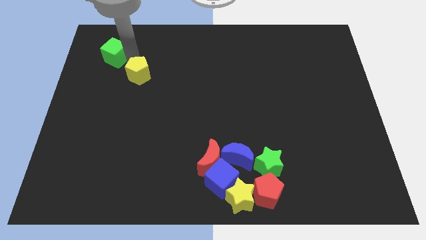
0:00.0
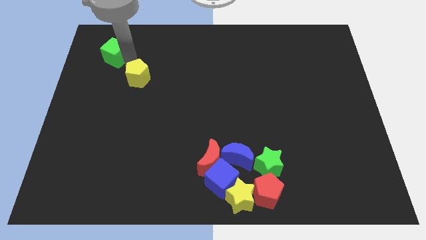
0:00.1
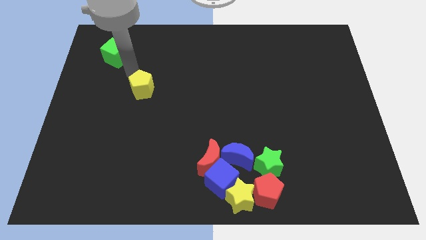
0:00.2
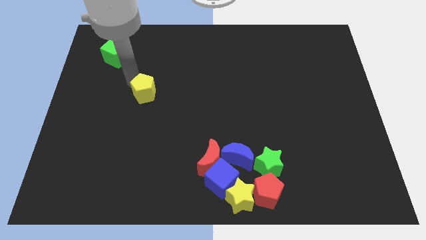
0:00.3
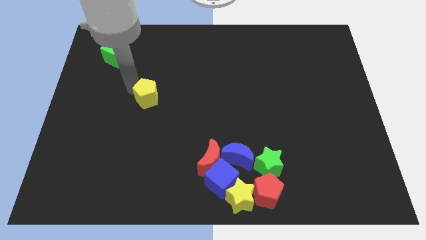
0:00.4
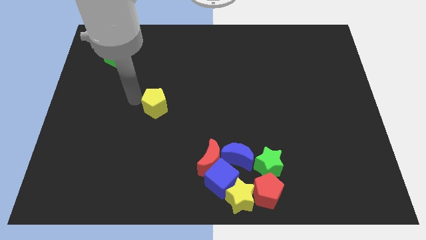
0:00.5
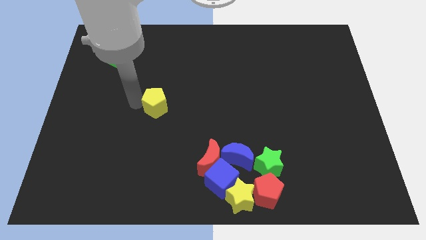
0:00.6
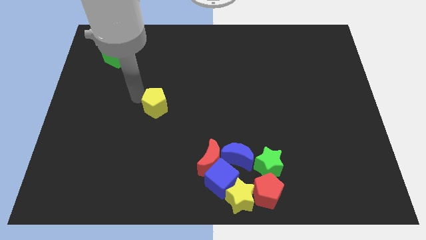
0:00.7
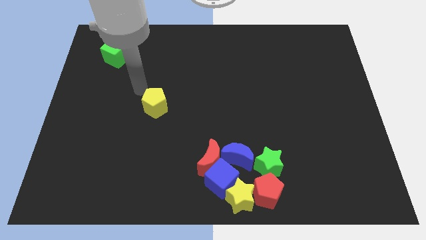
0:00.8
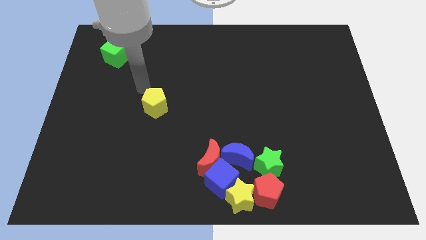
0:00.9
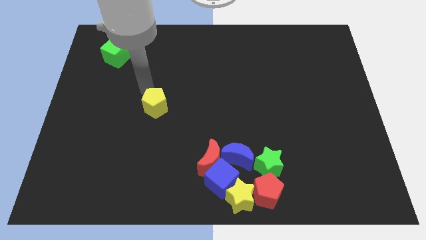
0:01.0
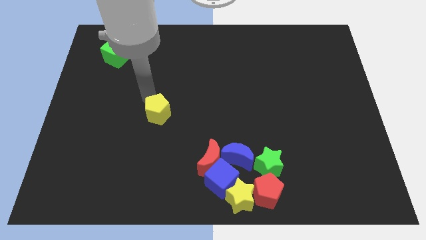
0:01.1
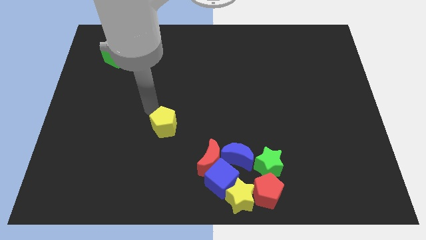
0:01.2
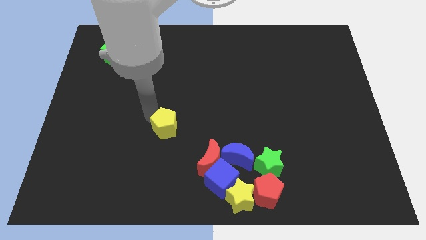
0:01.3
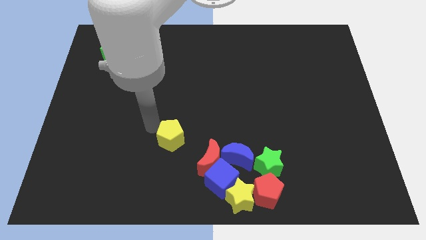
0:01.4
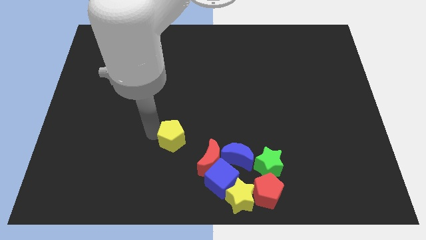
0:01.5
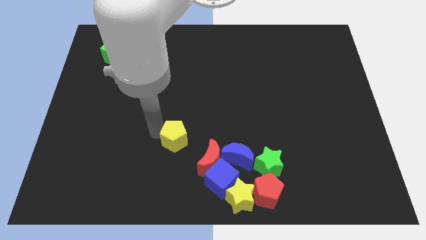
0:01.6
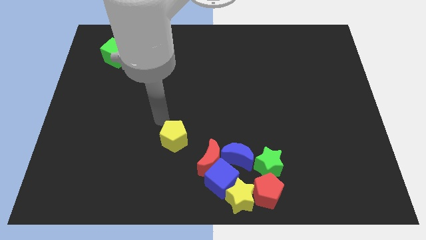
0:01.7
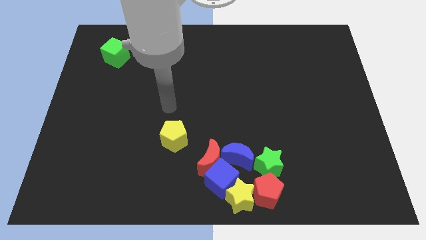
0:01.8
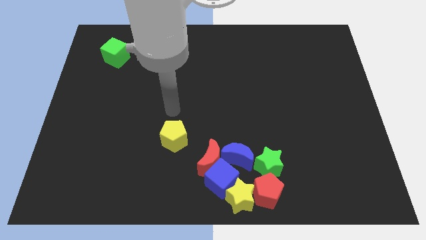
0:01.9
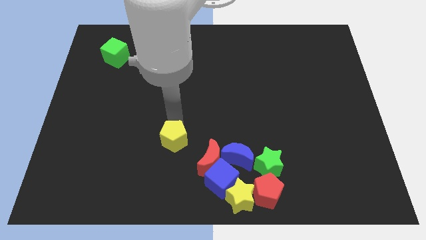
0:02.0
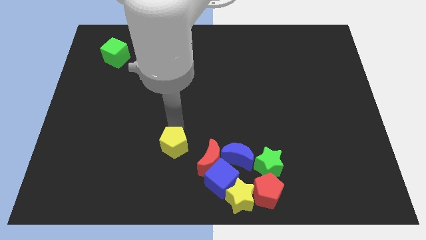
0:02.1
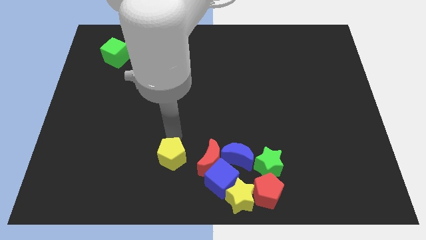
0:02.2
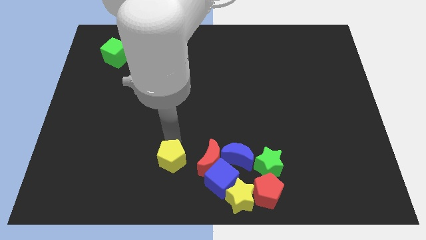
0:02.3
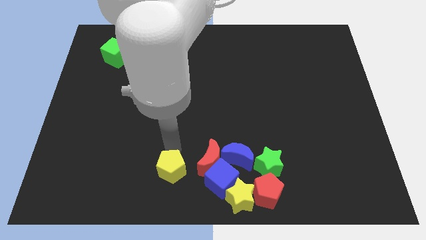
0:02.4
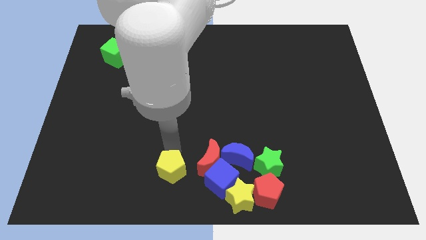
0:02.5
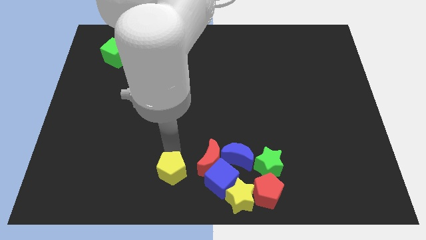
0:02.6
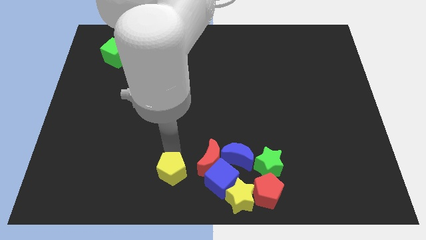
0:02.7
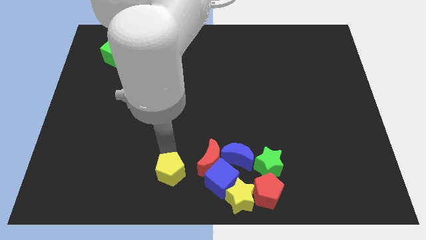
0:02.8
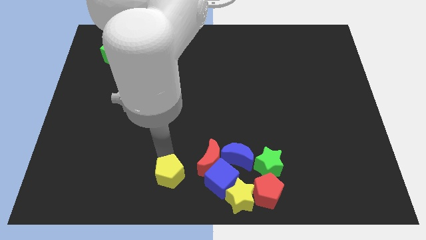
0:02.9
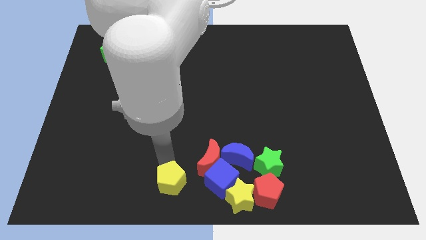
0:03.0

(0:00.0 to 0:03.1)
place the yellow pentagon to the left of the blue cube

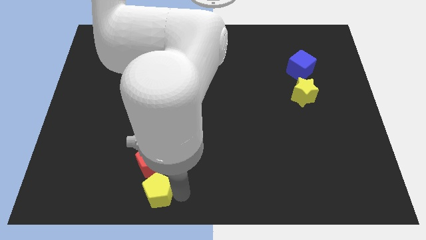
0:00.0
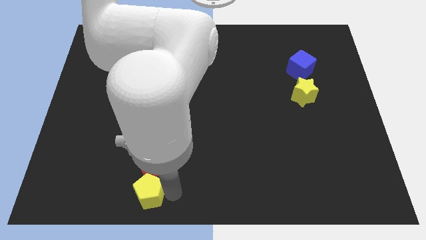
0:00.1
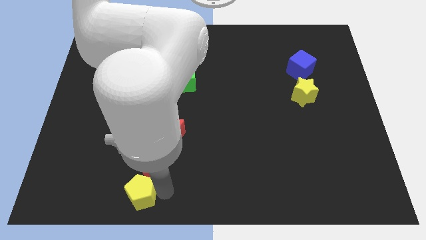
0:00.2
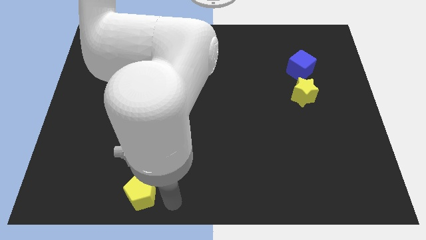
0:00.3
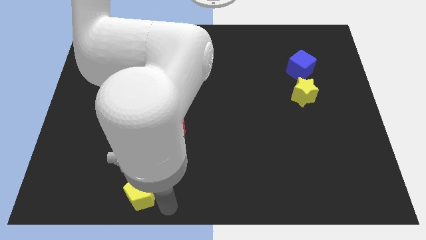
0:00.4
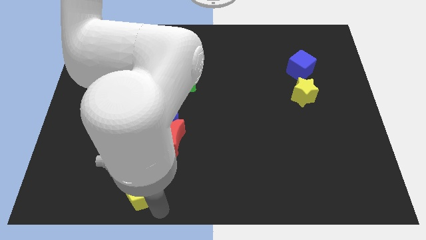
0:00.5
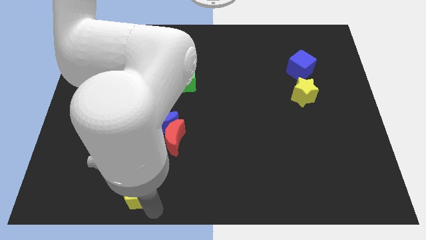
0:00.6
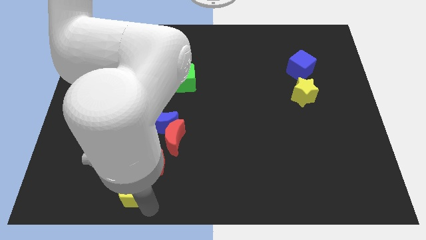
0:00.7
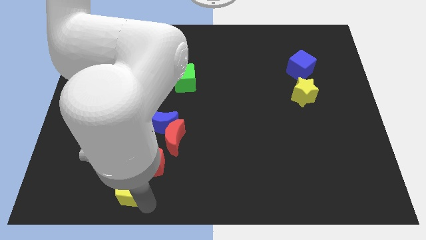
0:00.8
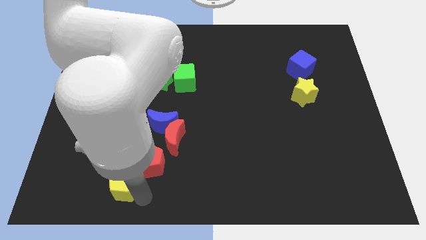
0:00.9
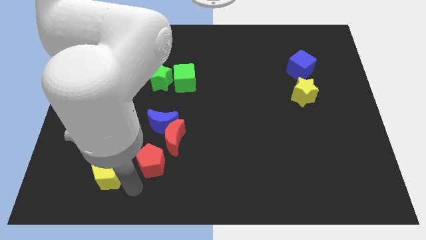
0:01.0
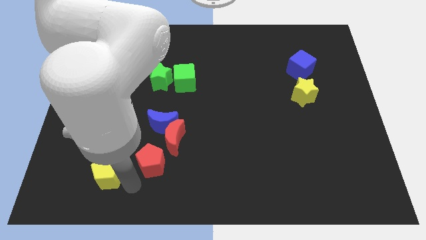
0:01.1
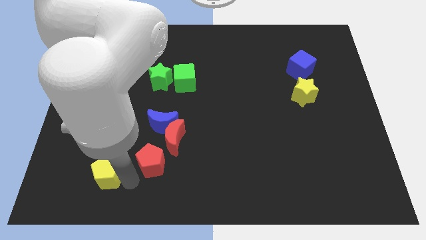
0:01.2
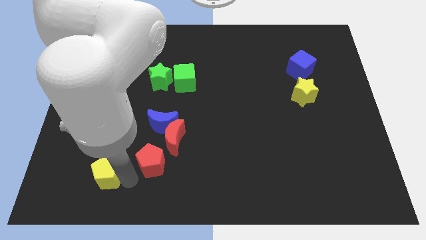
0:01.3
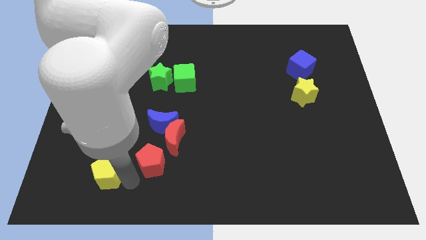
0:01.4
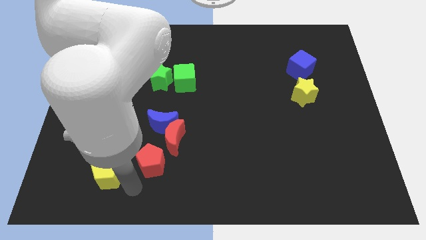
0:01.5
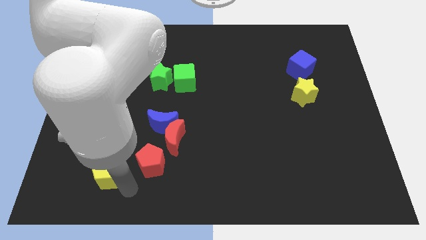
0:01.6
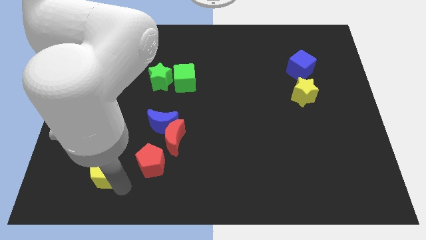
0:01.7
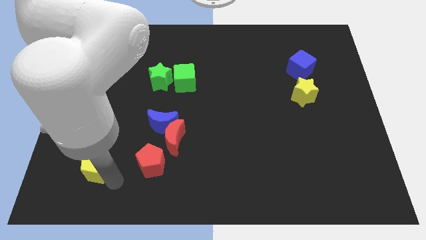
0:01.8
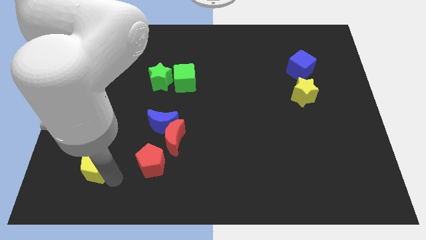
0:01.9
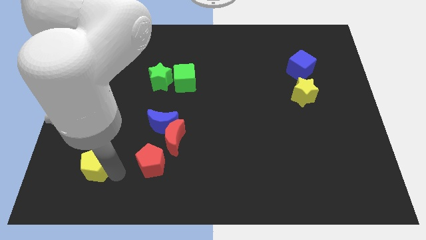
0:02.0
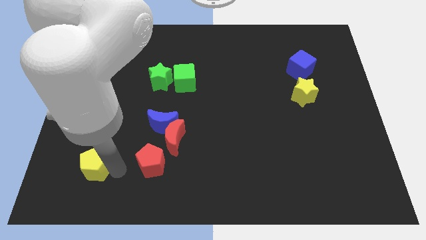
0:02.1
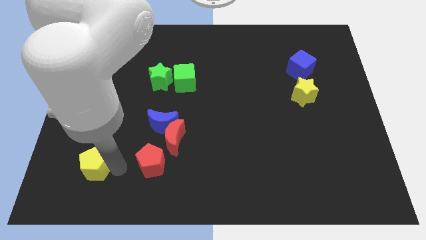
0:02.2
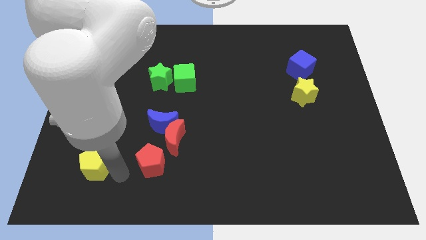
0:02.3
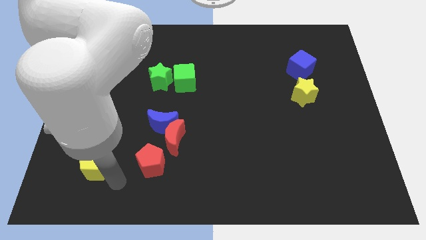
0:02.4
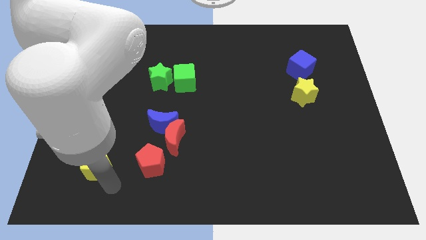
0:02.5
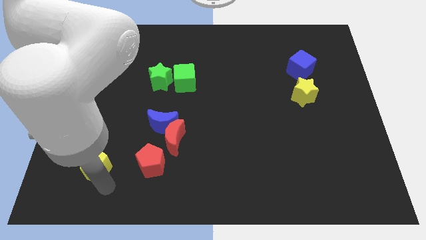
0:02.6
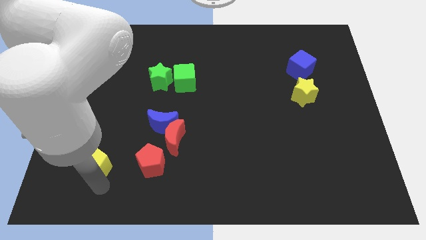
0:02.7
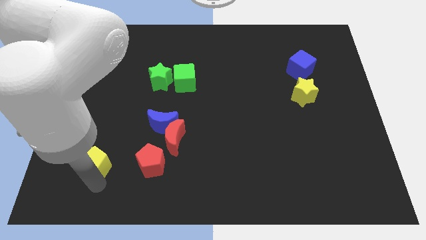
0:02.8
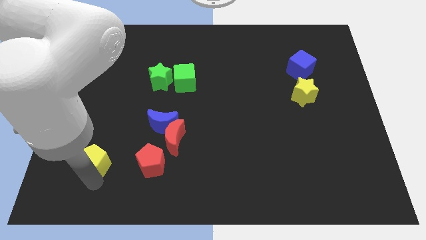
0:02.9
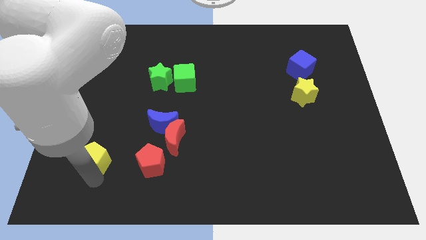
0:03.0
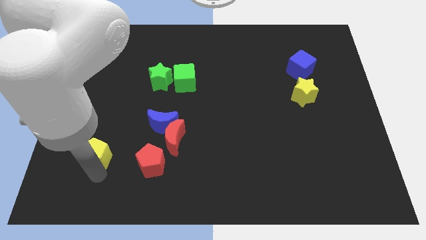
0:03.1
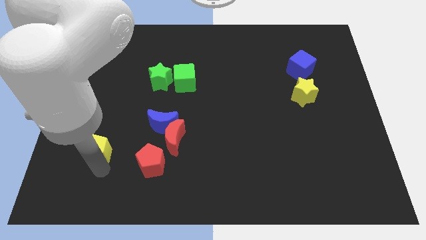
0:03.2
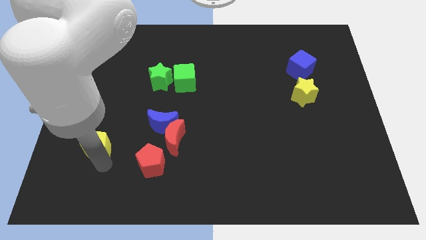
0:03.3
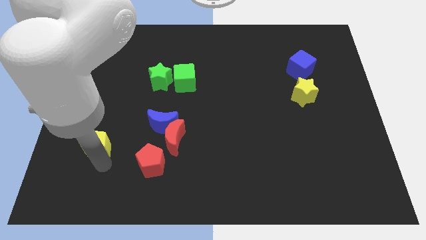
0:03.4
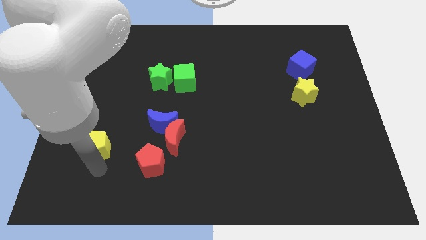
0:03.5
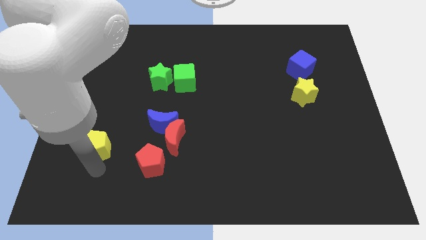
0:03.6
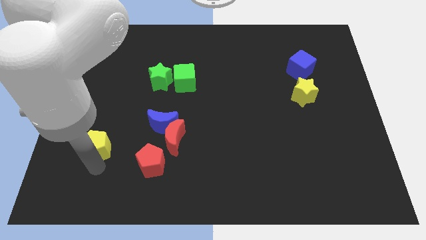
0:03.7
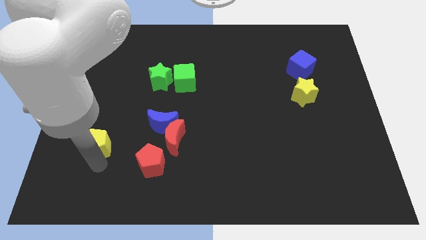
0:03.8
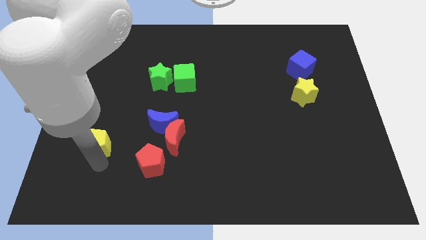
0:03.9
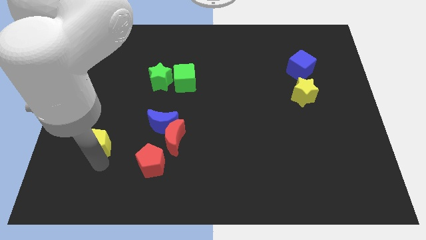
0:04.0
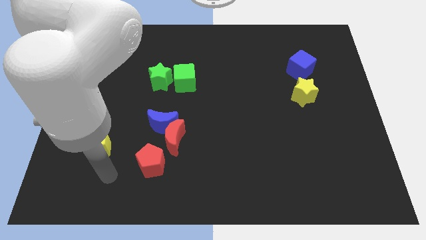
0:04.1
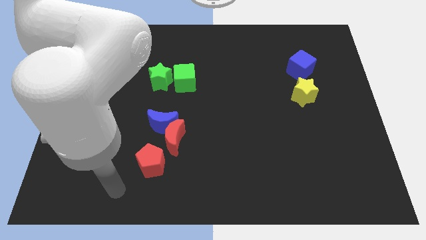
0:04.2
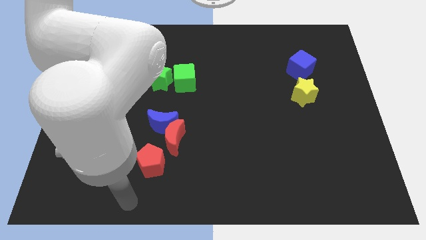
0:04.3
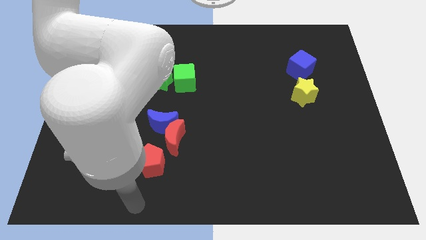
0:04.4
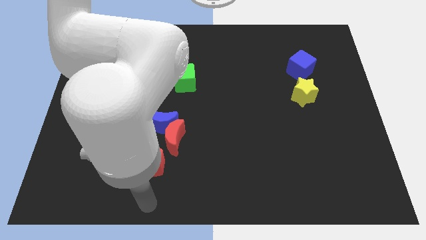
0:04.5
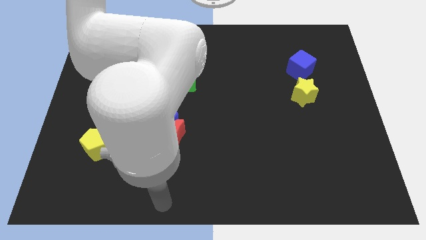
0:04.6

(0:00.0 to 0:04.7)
push the yellow pentagon to bottom left

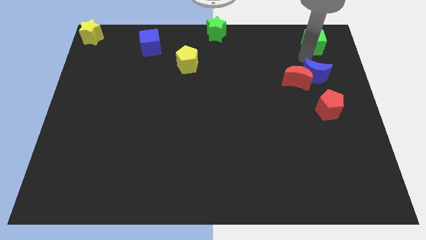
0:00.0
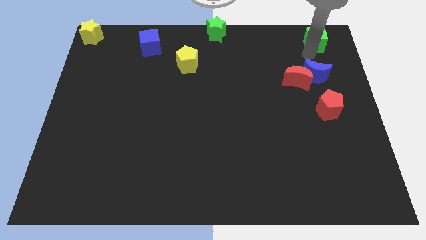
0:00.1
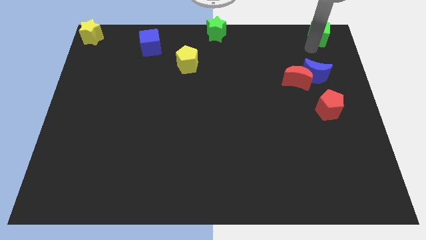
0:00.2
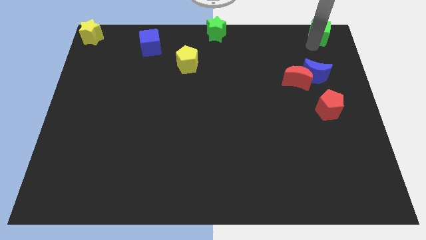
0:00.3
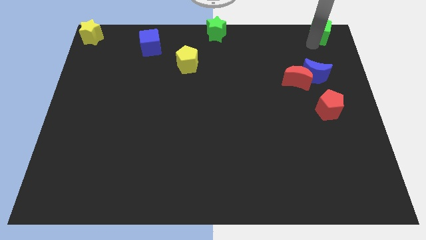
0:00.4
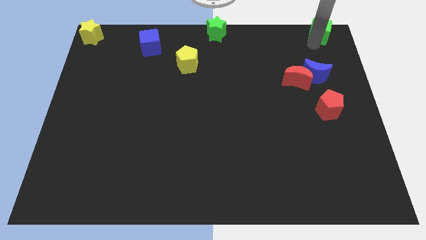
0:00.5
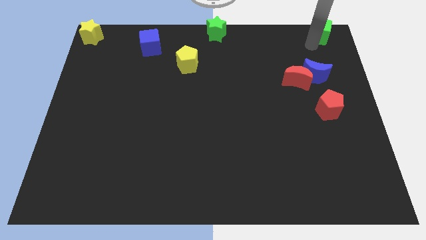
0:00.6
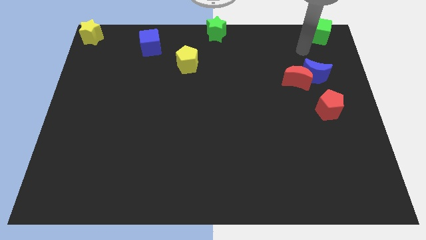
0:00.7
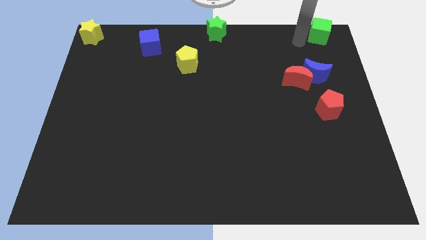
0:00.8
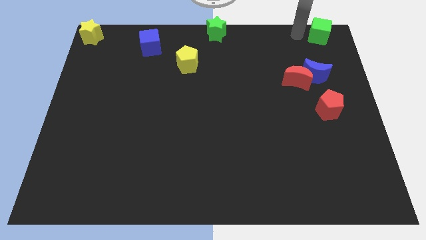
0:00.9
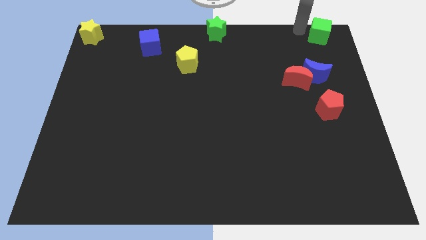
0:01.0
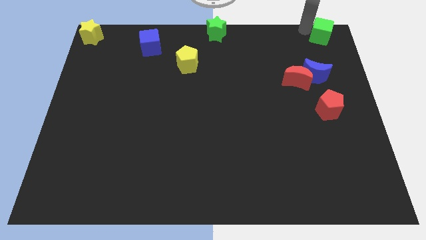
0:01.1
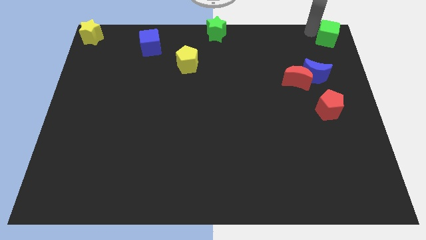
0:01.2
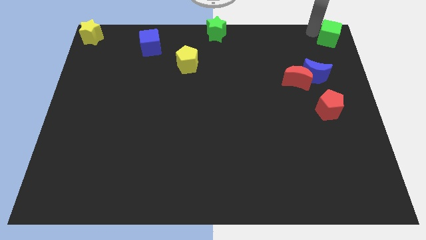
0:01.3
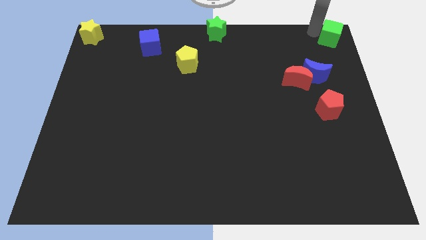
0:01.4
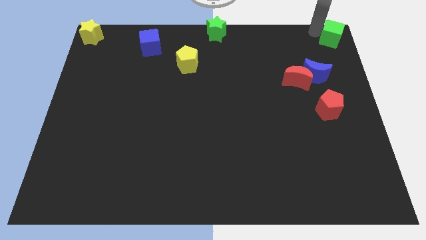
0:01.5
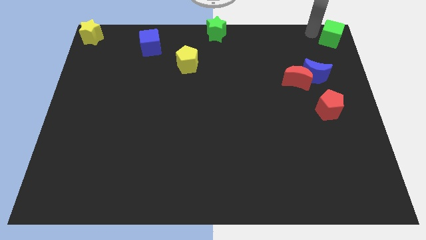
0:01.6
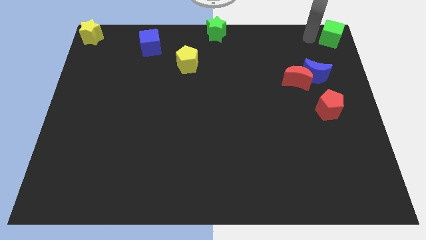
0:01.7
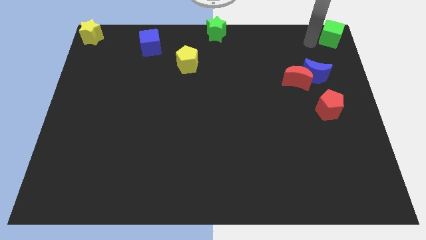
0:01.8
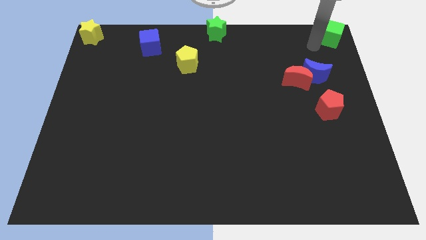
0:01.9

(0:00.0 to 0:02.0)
place the green cube at the top right corner of the board
